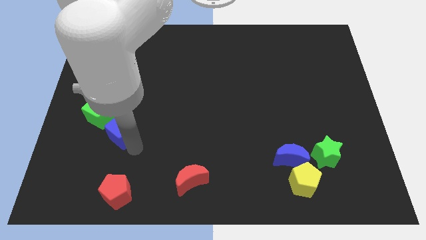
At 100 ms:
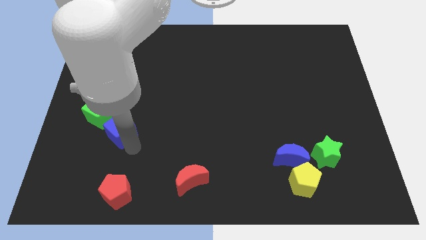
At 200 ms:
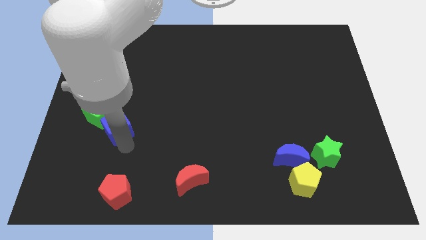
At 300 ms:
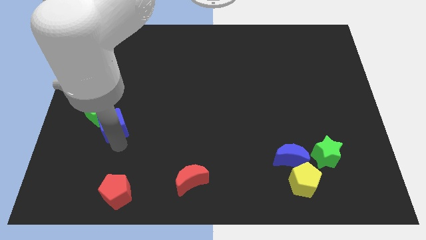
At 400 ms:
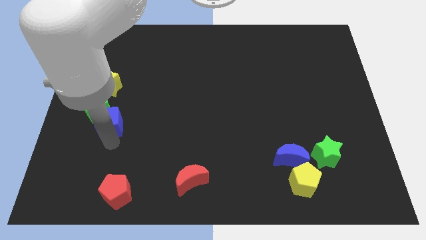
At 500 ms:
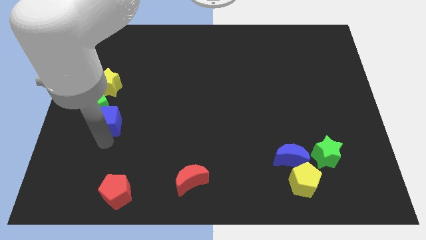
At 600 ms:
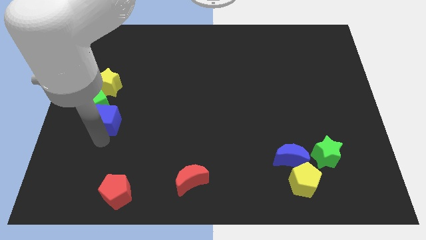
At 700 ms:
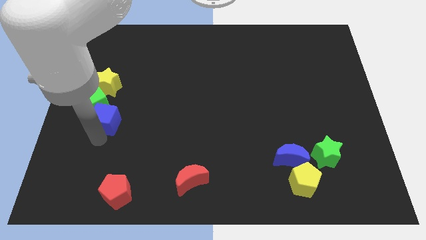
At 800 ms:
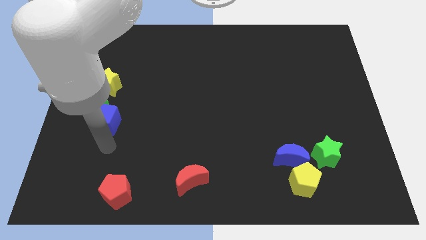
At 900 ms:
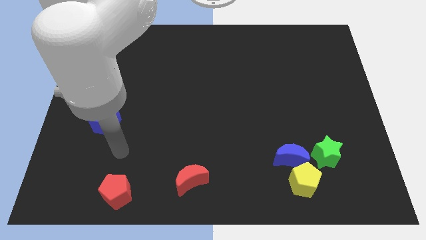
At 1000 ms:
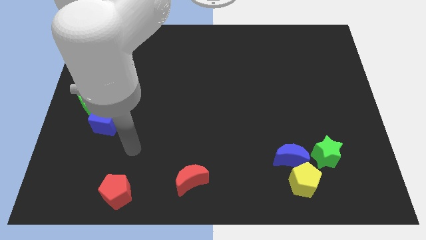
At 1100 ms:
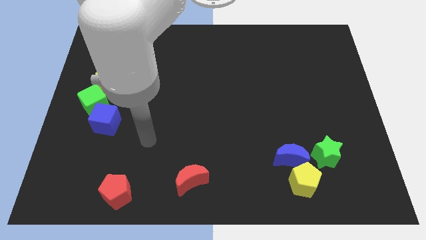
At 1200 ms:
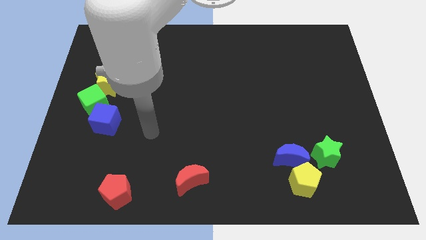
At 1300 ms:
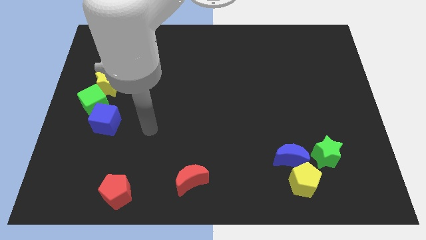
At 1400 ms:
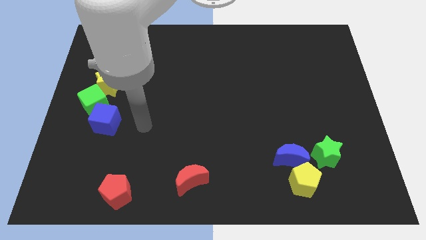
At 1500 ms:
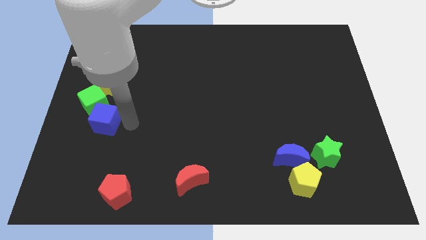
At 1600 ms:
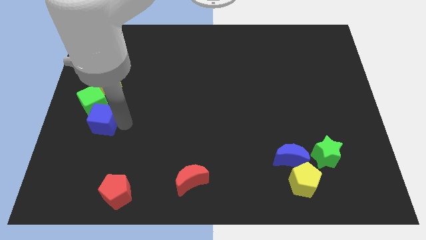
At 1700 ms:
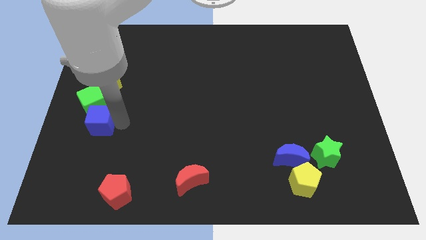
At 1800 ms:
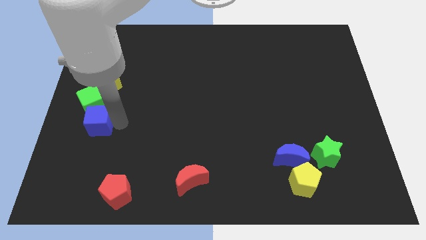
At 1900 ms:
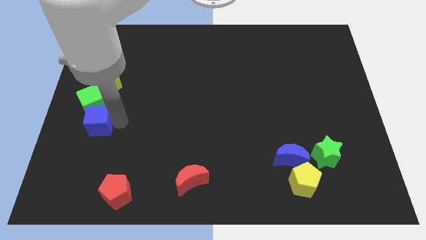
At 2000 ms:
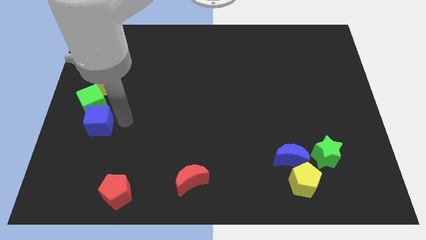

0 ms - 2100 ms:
move the blue cube into the bottom of the green cube

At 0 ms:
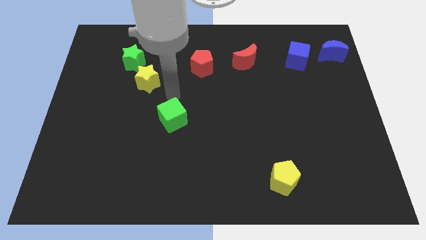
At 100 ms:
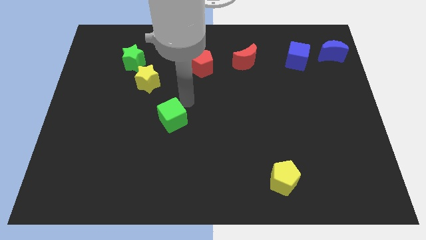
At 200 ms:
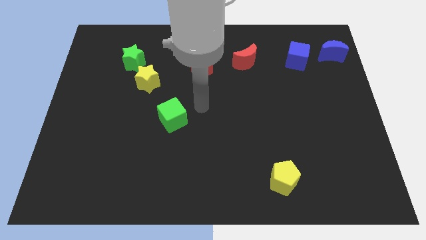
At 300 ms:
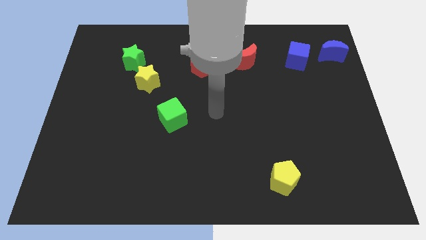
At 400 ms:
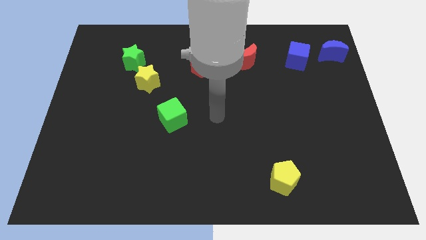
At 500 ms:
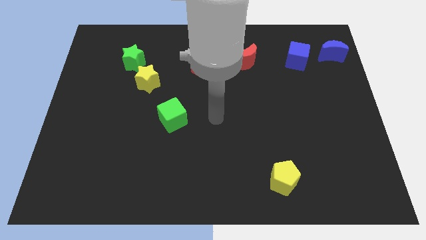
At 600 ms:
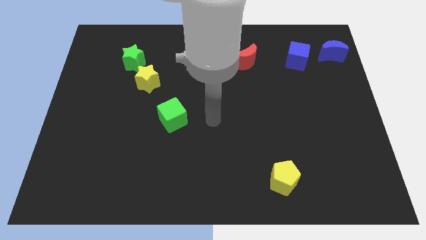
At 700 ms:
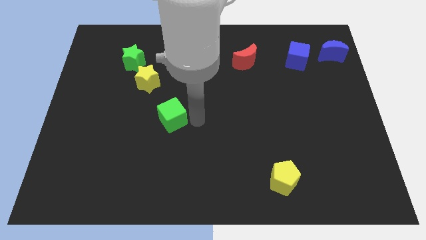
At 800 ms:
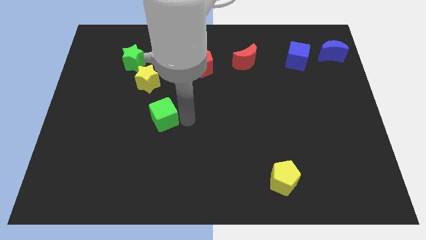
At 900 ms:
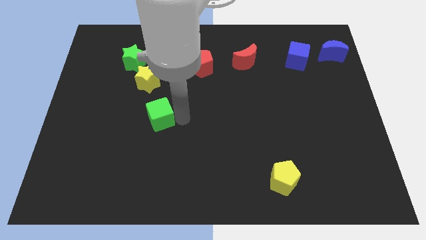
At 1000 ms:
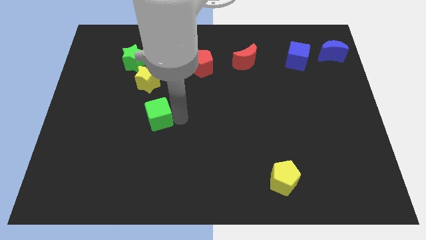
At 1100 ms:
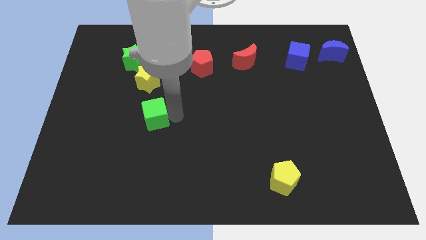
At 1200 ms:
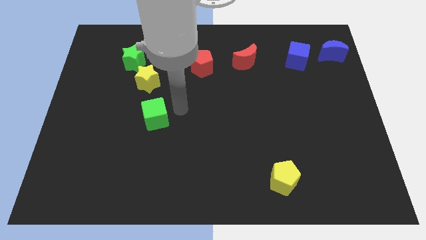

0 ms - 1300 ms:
slide the green cube underneath the yellow star

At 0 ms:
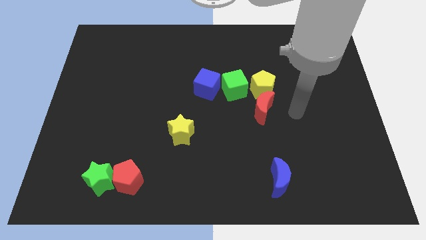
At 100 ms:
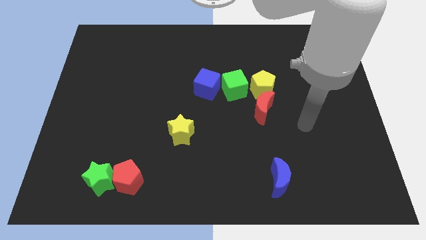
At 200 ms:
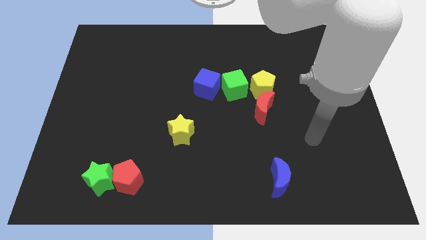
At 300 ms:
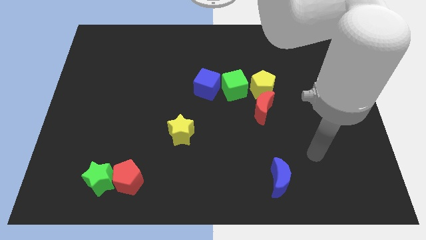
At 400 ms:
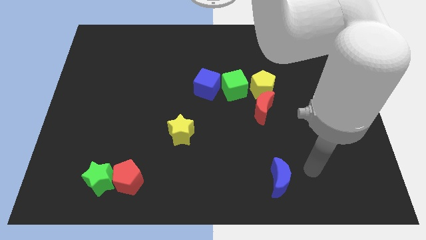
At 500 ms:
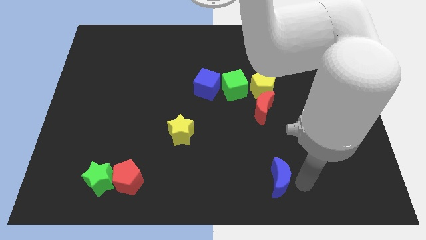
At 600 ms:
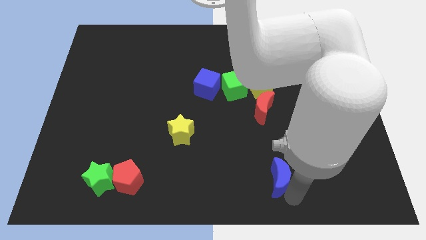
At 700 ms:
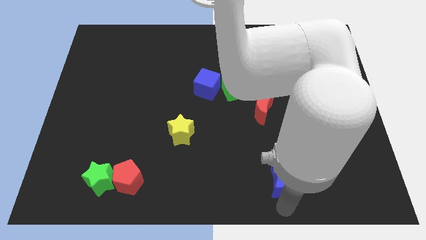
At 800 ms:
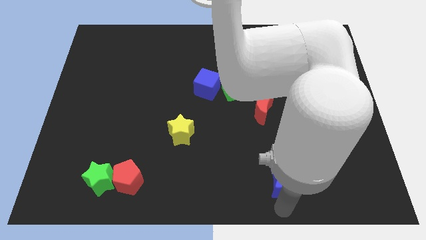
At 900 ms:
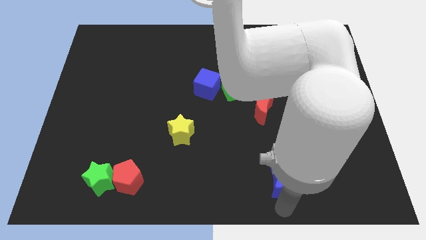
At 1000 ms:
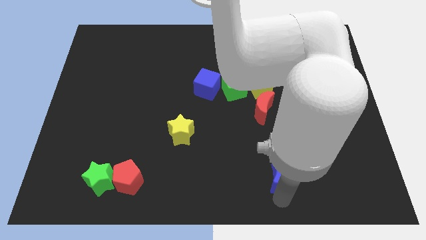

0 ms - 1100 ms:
tap the blue crescent

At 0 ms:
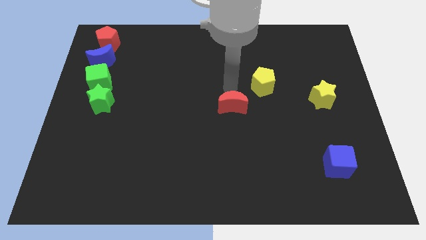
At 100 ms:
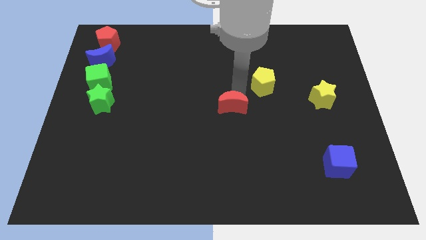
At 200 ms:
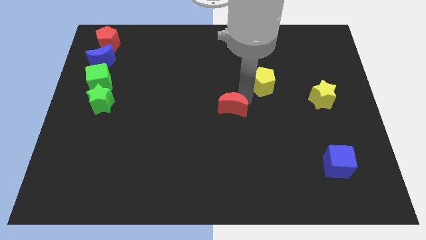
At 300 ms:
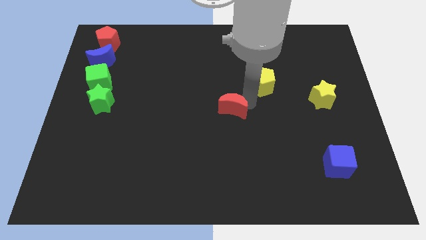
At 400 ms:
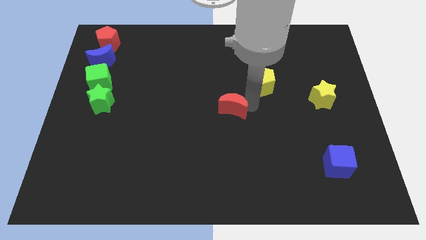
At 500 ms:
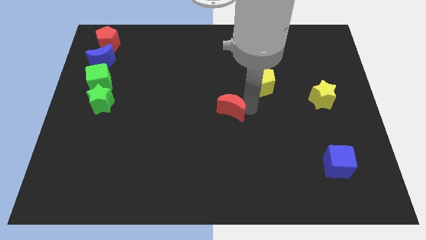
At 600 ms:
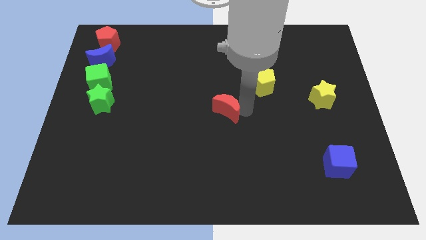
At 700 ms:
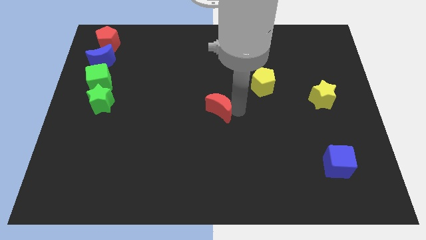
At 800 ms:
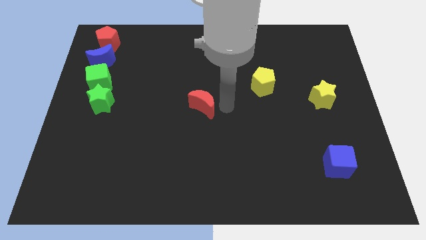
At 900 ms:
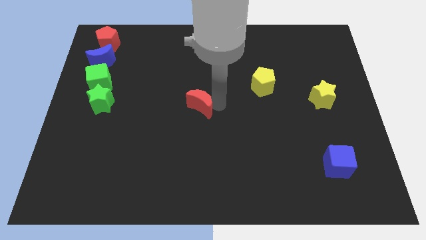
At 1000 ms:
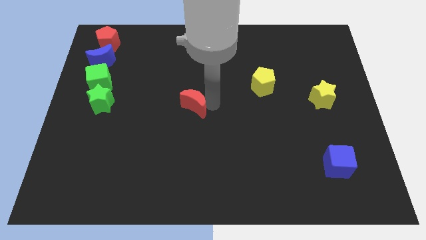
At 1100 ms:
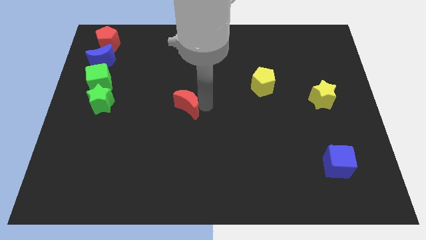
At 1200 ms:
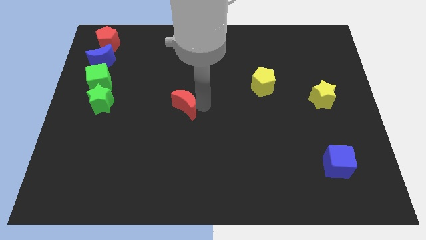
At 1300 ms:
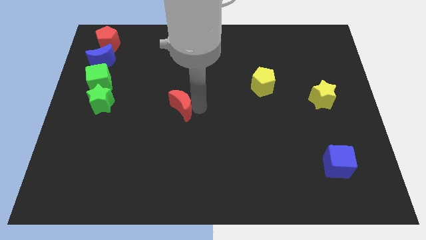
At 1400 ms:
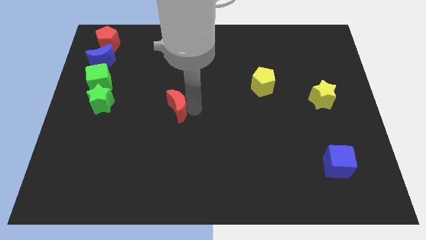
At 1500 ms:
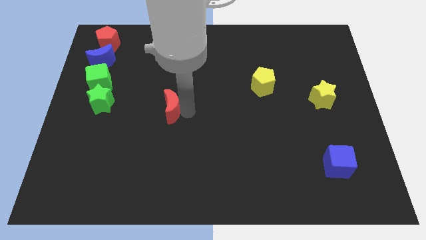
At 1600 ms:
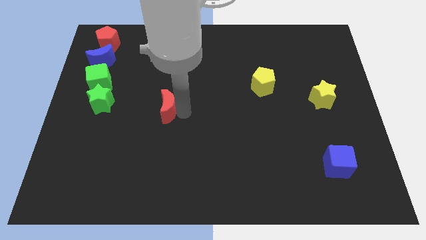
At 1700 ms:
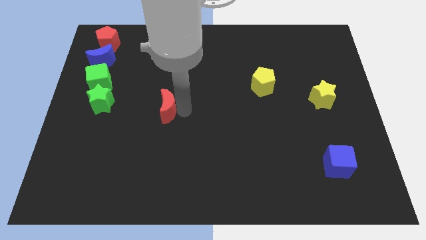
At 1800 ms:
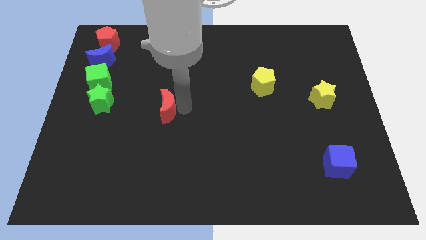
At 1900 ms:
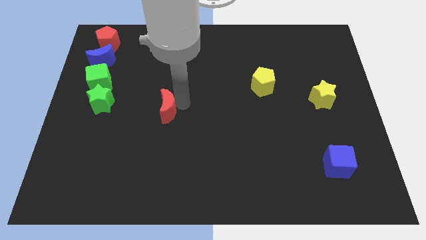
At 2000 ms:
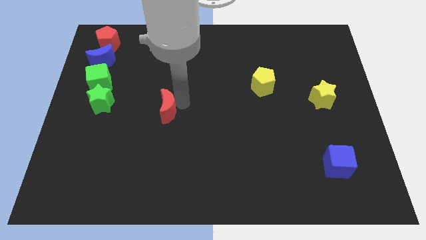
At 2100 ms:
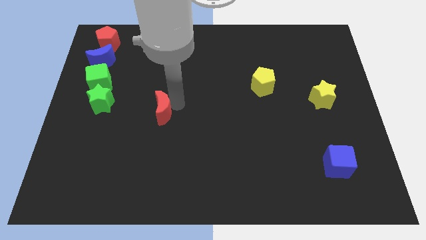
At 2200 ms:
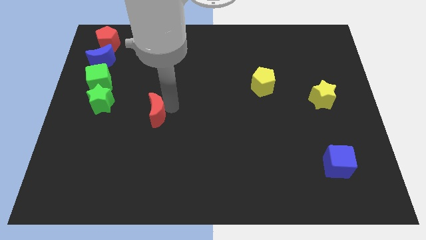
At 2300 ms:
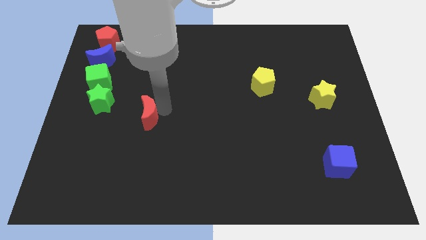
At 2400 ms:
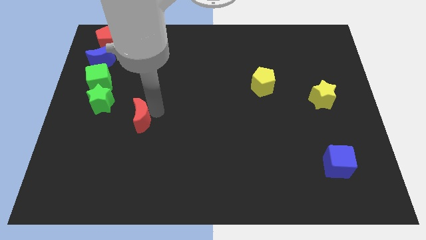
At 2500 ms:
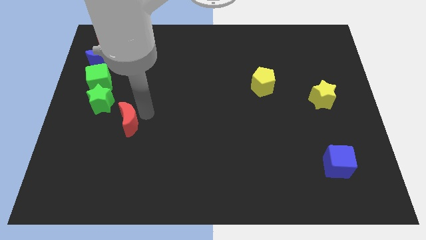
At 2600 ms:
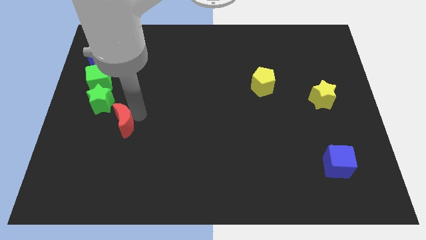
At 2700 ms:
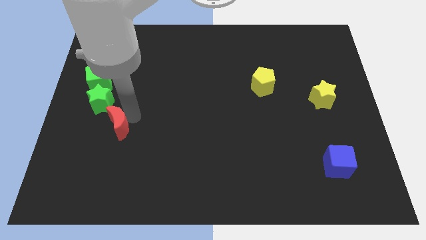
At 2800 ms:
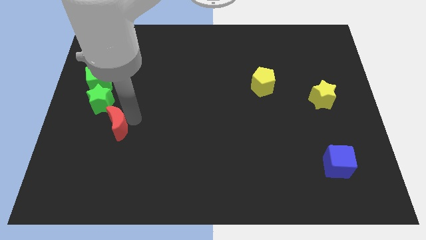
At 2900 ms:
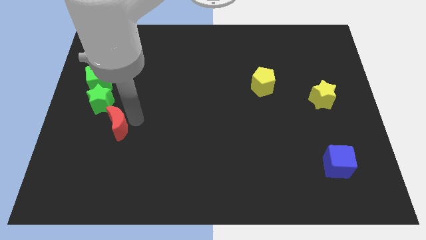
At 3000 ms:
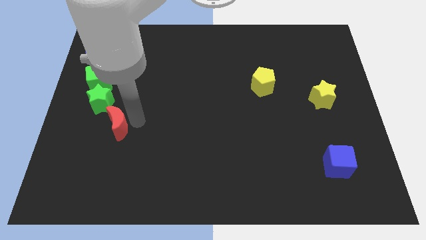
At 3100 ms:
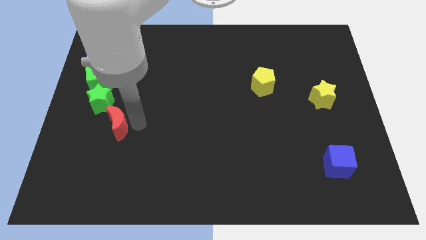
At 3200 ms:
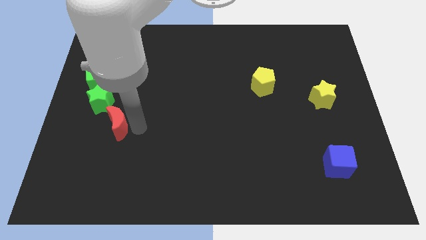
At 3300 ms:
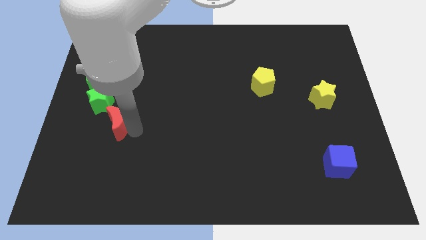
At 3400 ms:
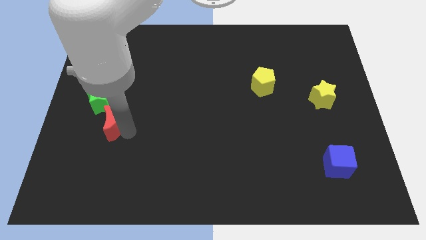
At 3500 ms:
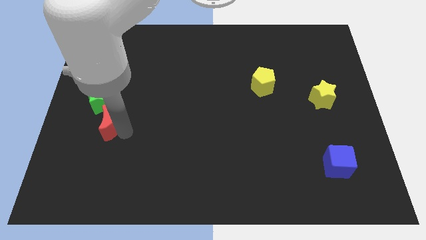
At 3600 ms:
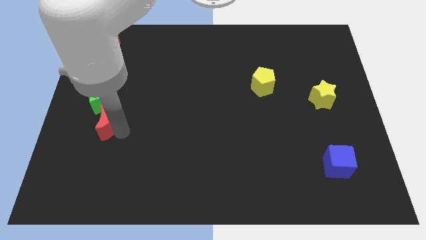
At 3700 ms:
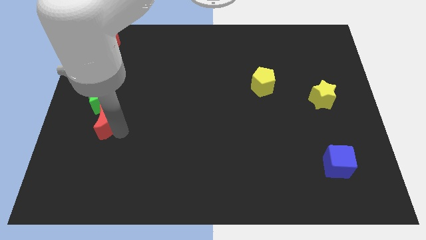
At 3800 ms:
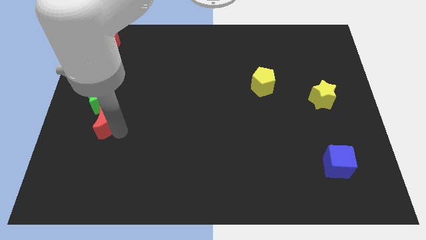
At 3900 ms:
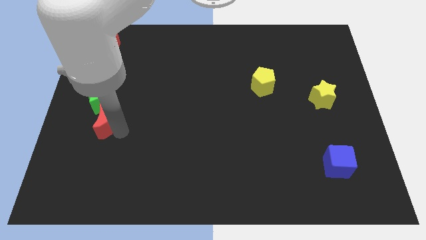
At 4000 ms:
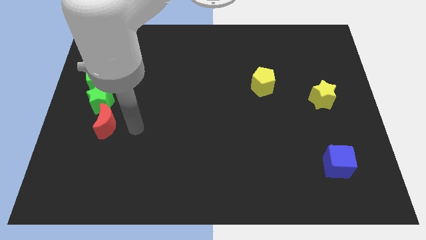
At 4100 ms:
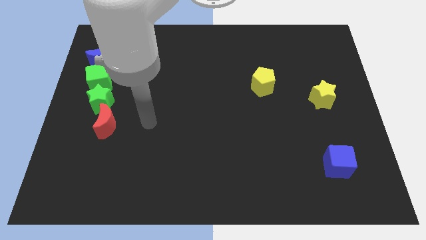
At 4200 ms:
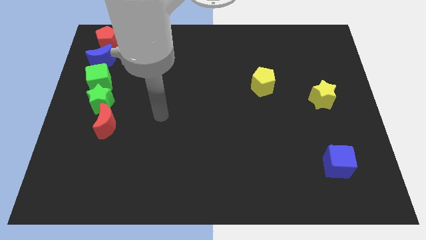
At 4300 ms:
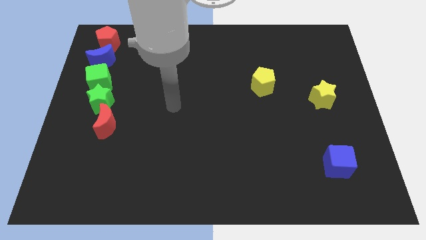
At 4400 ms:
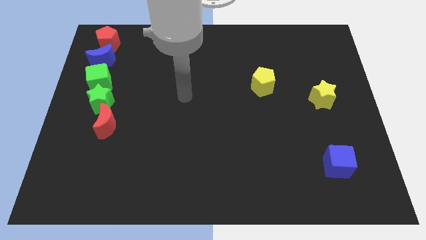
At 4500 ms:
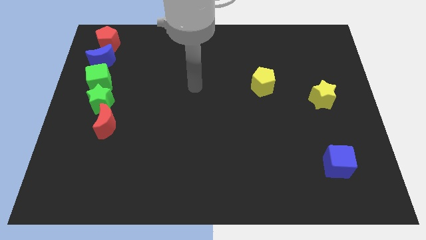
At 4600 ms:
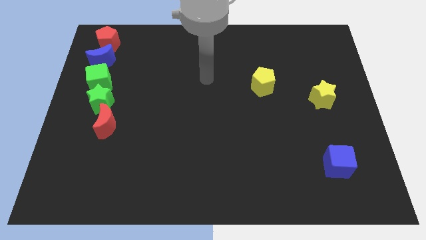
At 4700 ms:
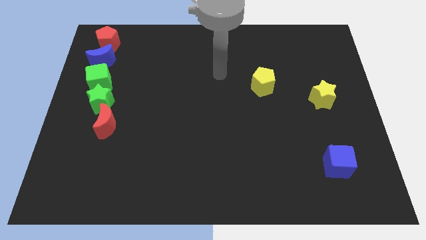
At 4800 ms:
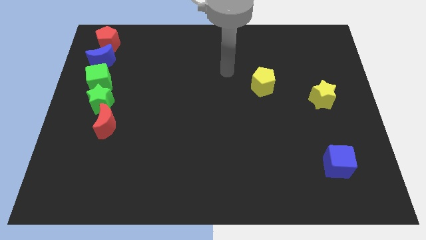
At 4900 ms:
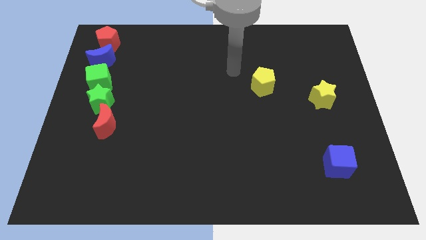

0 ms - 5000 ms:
move red moon towards green star
